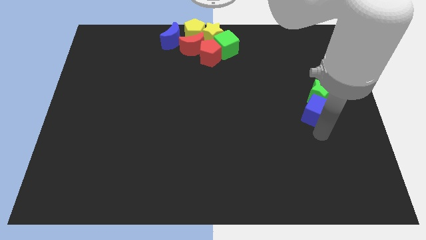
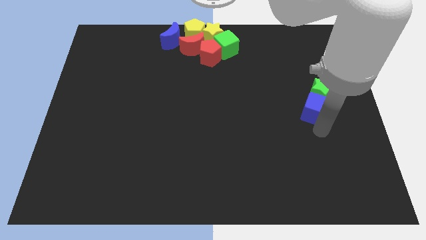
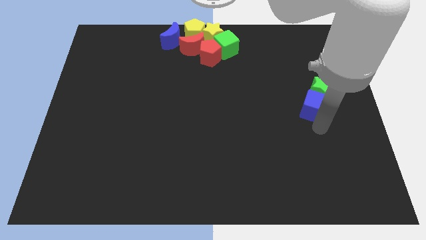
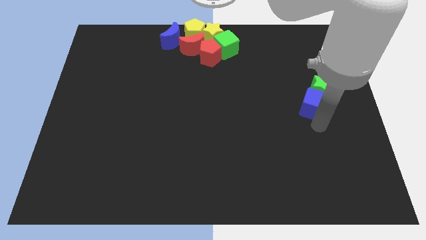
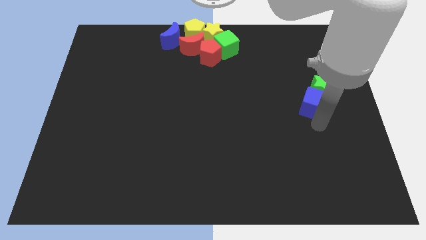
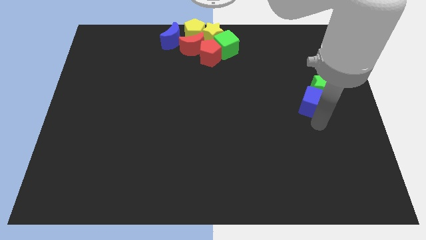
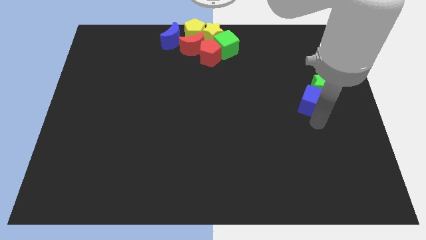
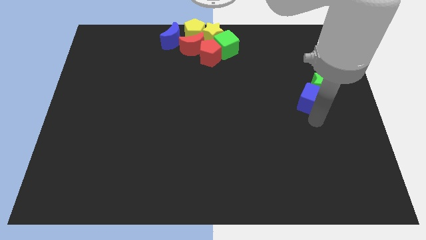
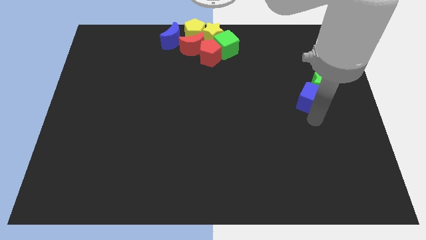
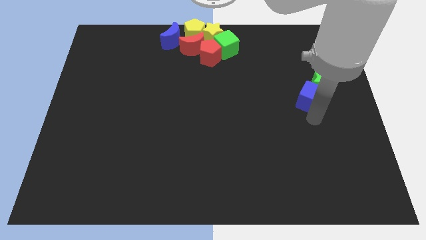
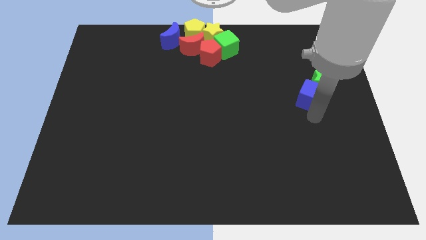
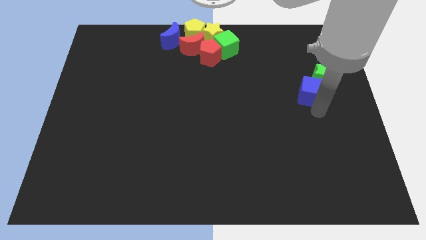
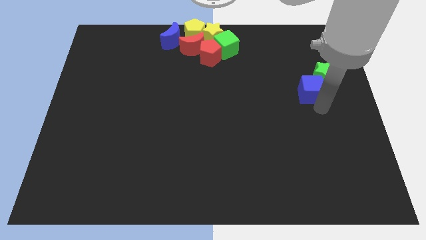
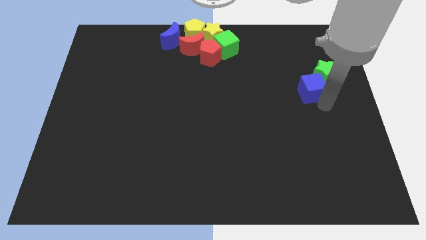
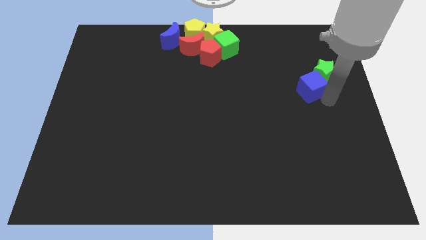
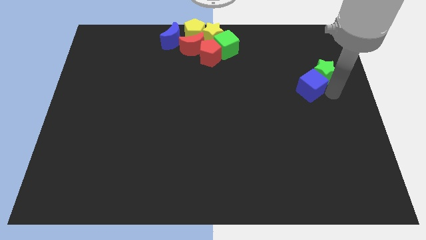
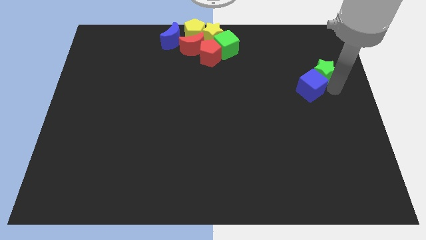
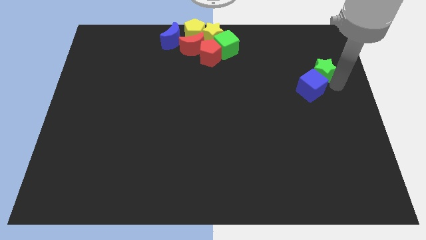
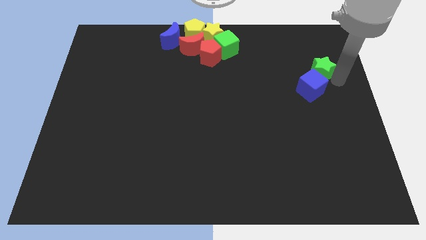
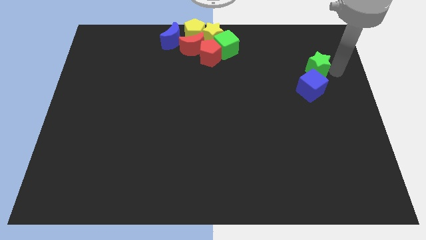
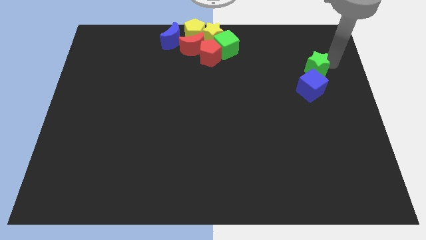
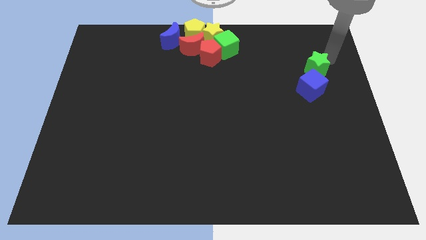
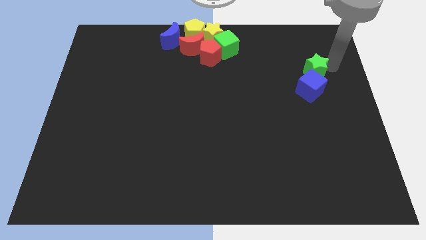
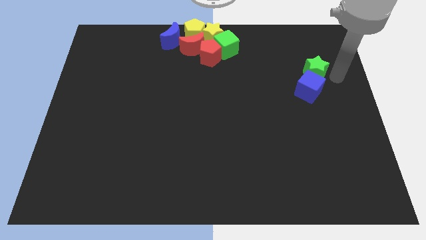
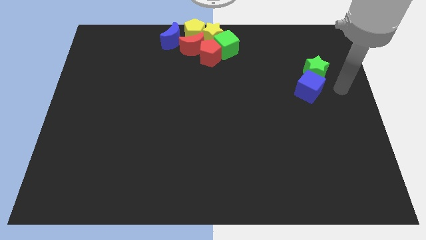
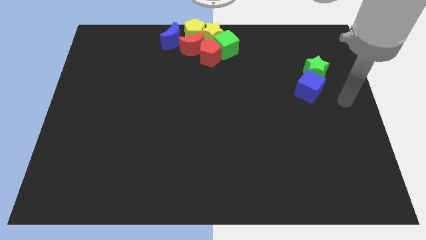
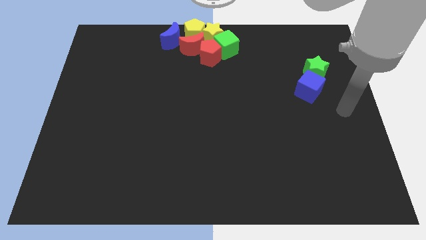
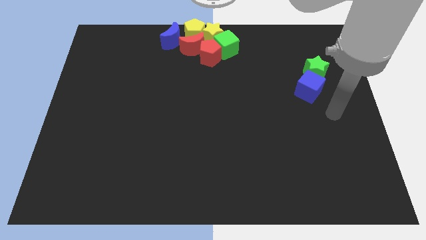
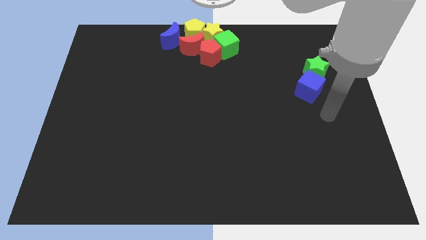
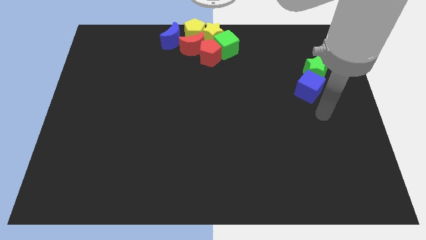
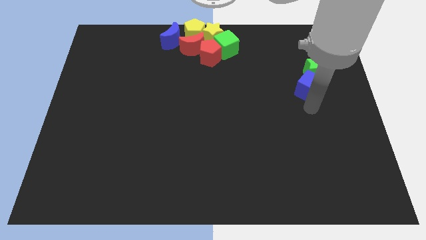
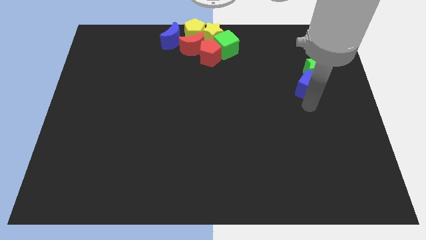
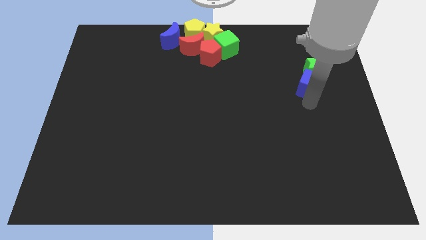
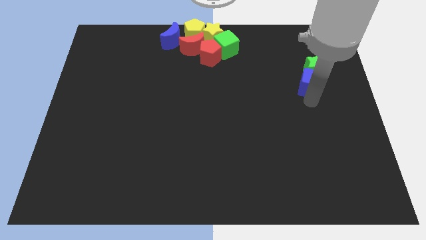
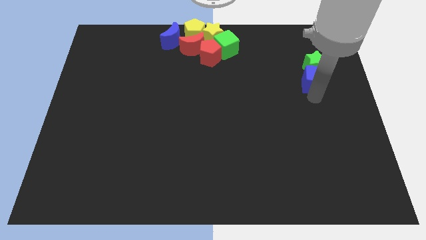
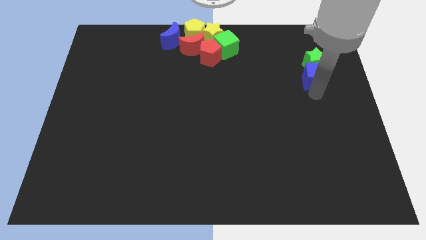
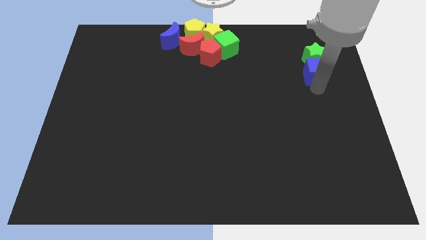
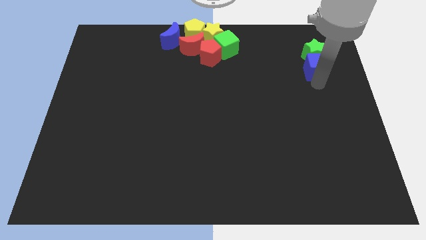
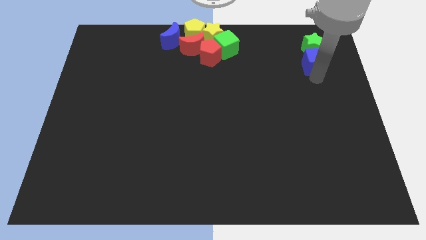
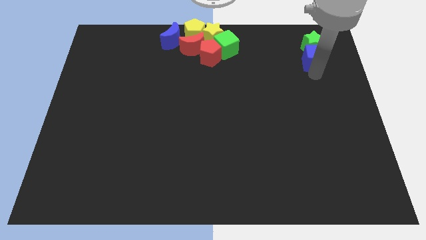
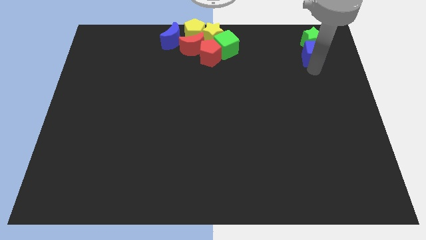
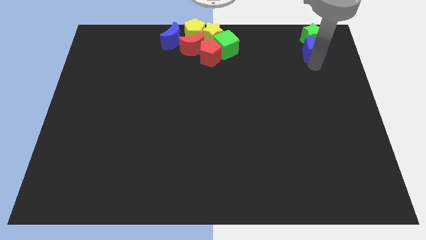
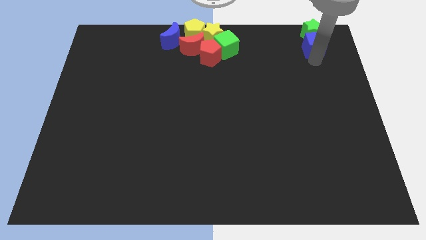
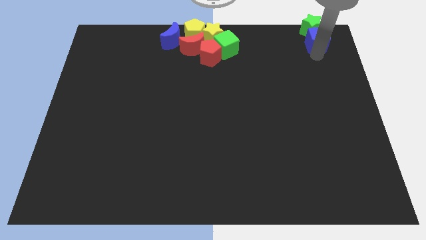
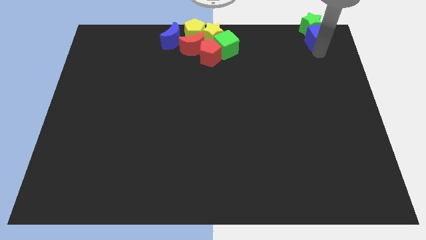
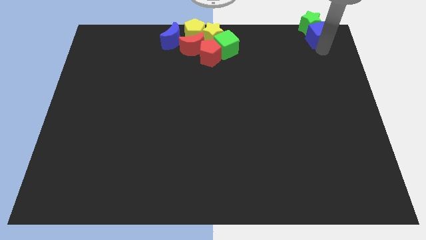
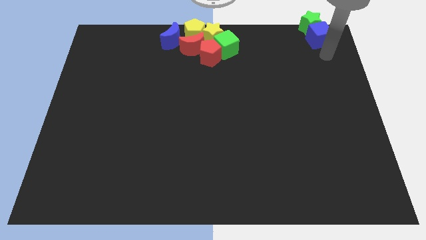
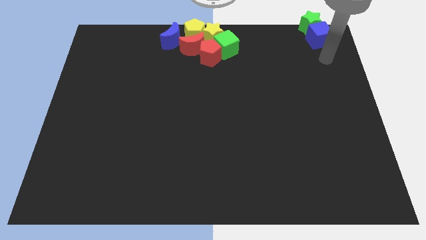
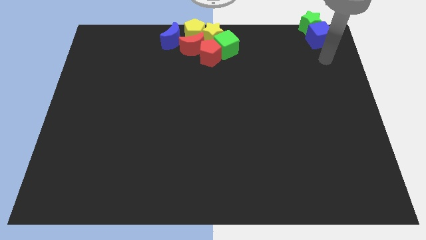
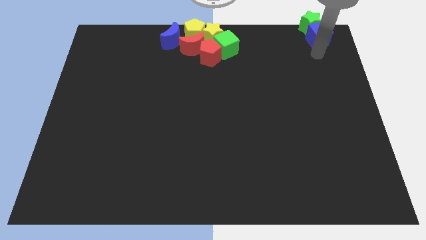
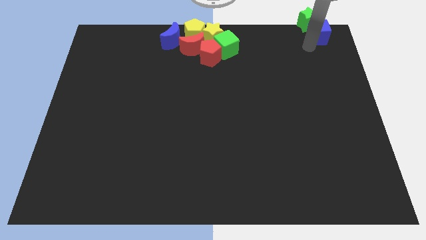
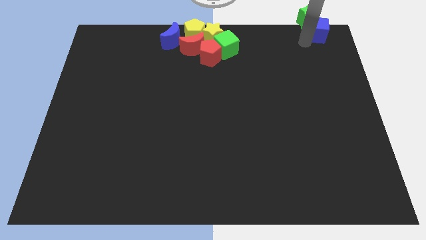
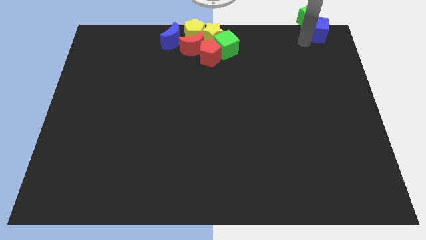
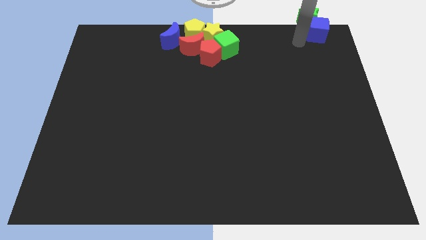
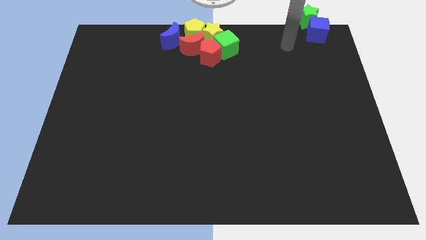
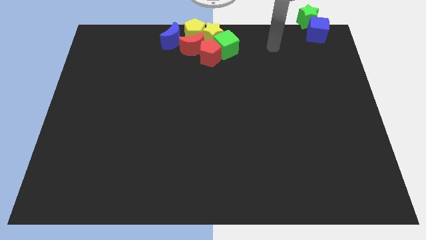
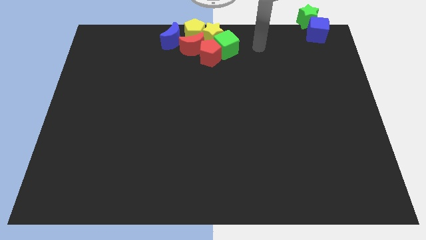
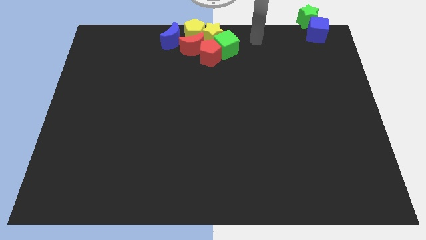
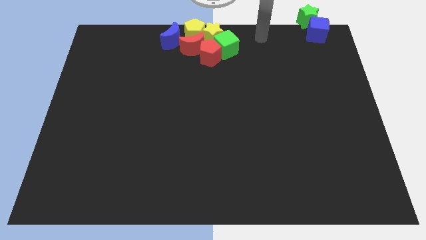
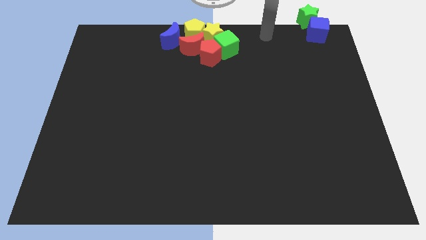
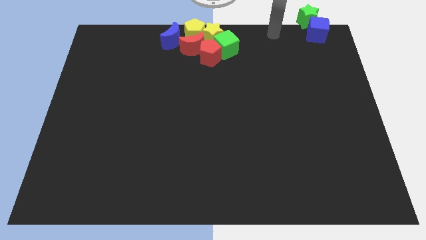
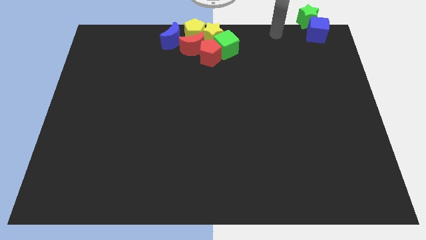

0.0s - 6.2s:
place blue cube along with green star in the top right

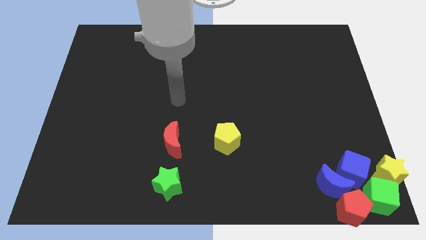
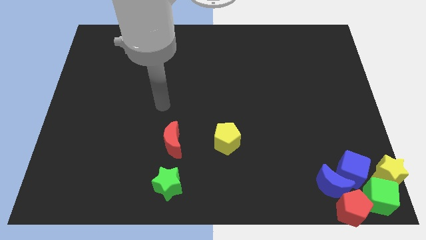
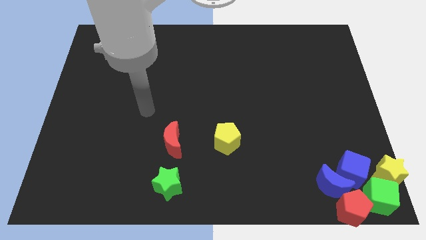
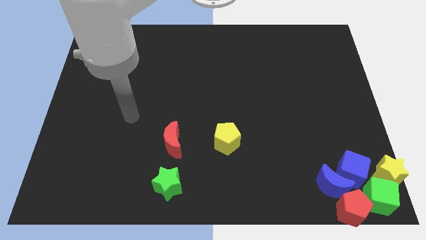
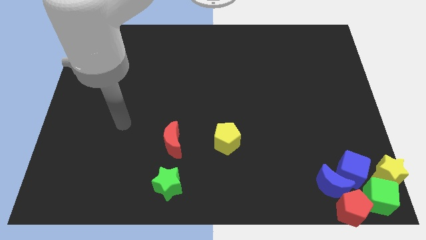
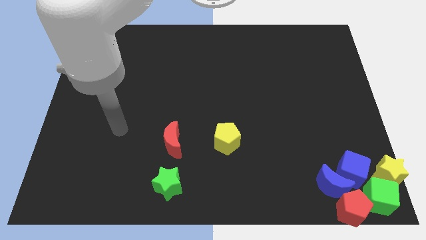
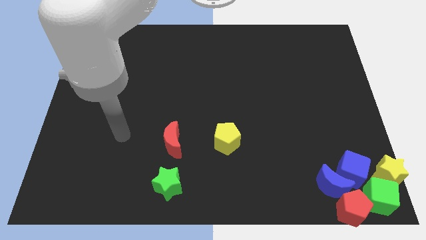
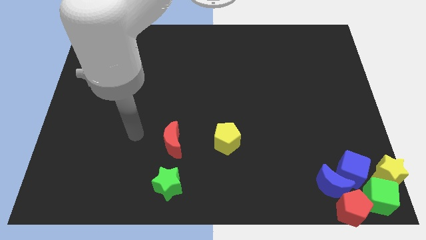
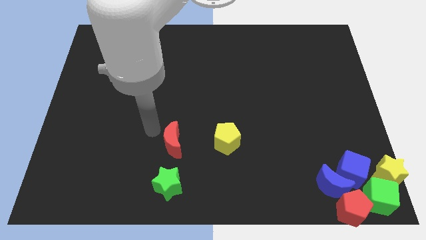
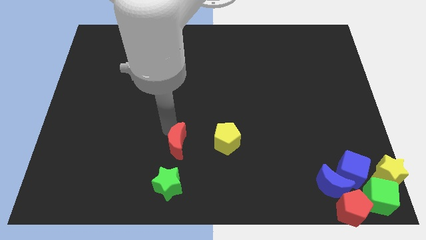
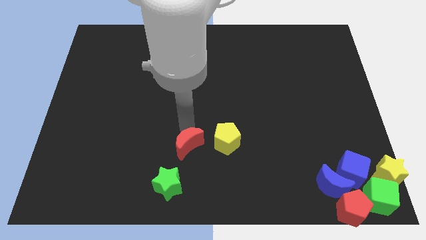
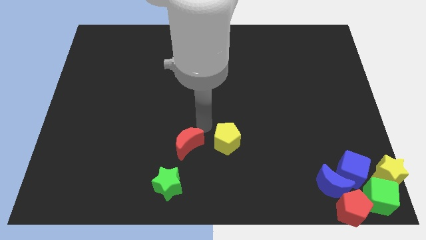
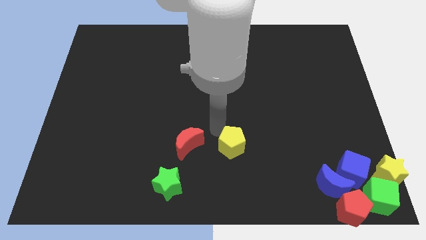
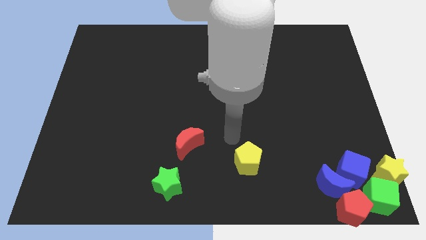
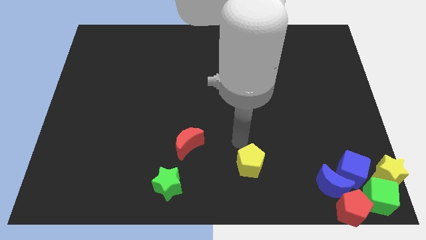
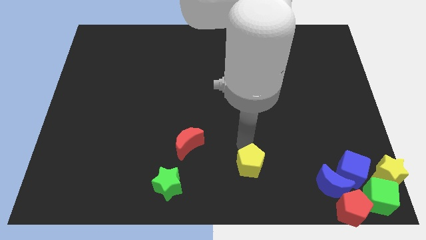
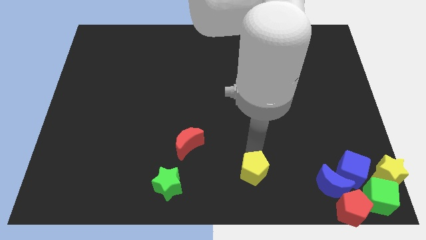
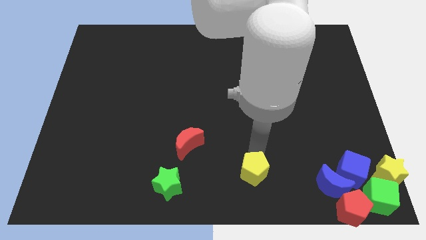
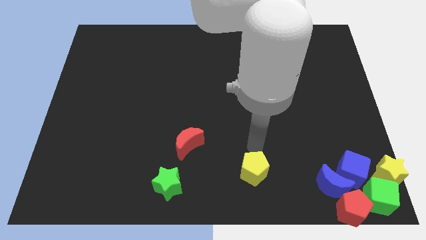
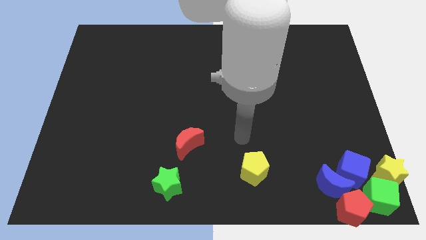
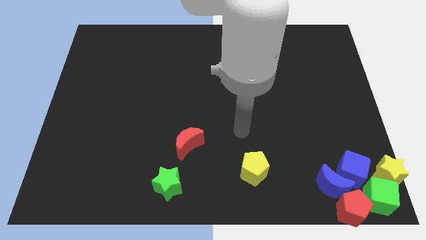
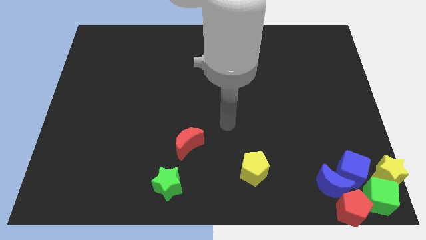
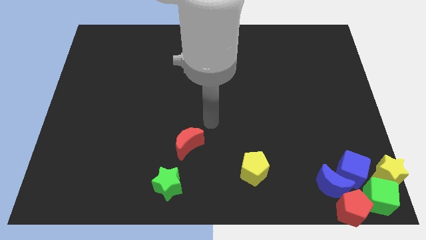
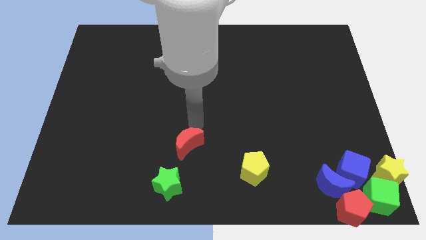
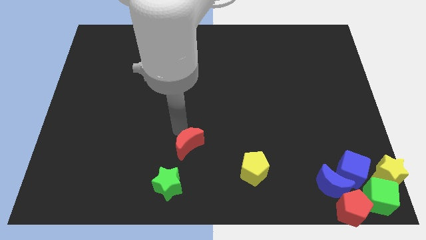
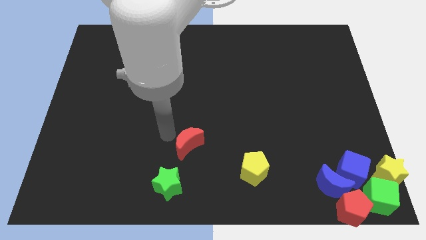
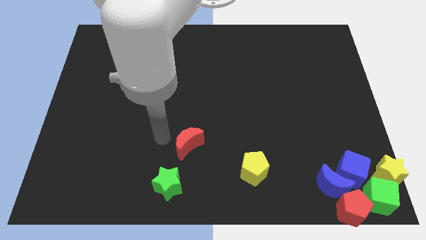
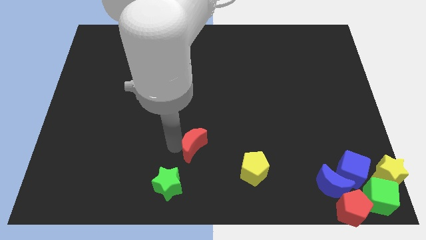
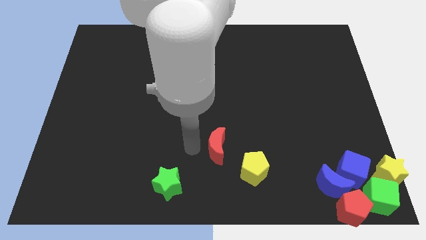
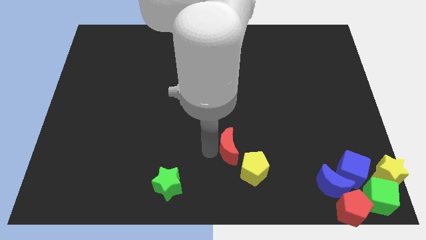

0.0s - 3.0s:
slightly push the red moon and yellow pentagon towards bottom of baord
